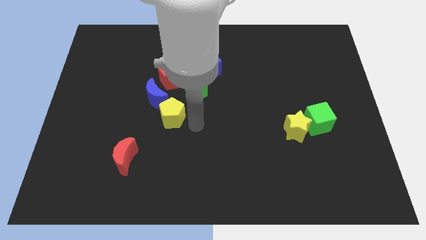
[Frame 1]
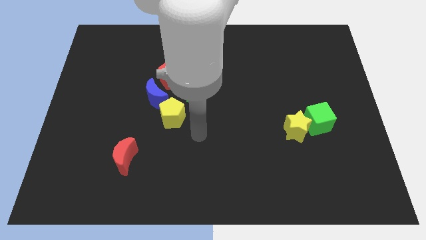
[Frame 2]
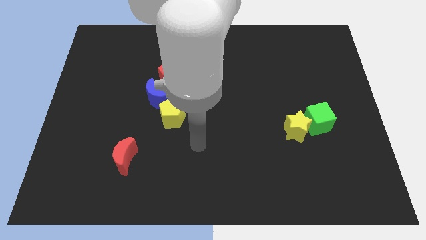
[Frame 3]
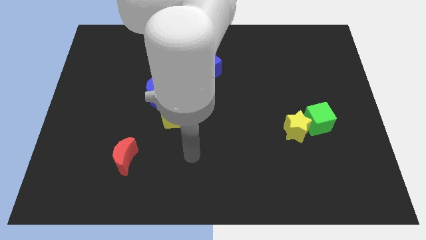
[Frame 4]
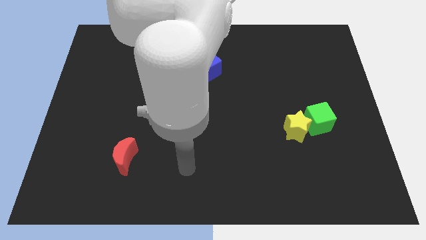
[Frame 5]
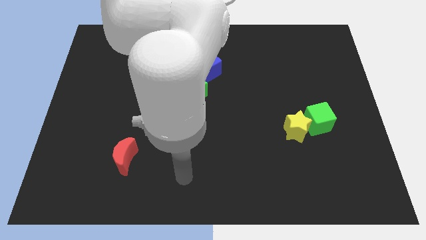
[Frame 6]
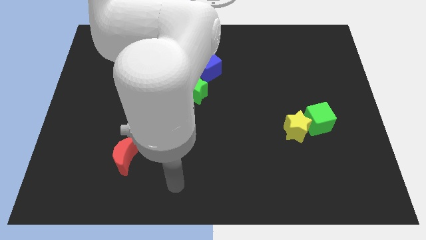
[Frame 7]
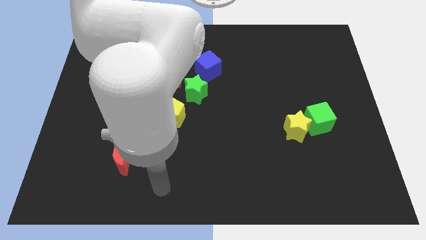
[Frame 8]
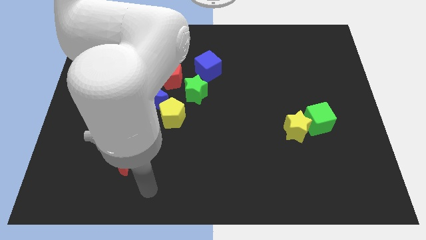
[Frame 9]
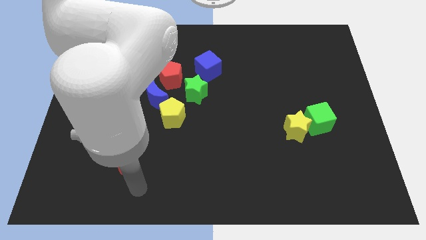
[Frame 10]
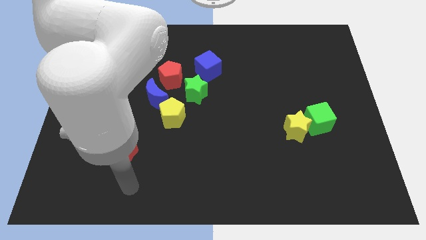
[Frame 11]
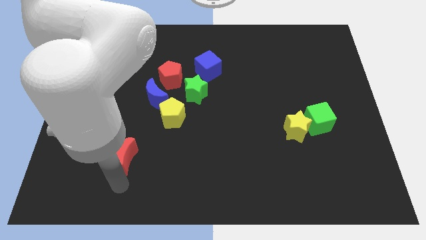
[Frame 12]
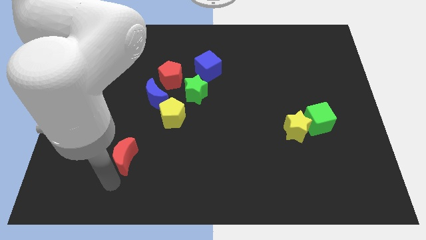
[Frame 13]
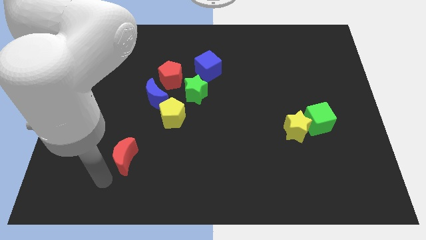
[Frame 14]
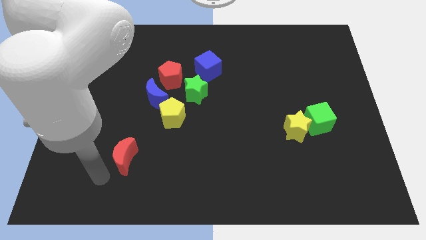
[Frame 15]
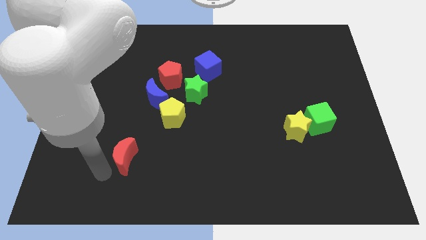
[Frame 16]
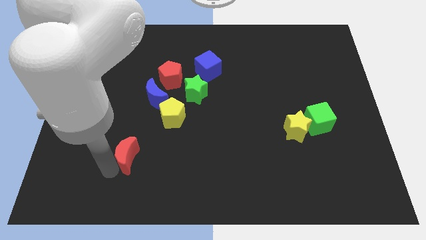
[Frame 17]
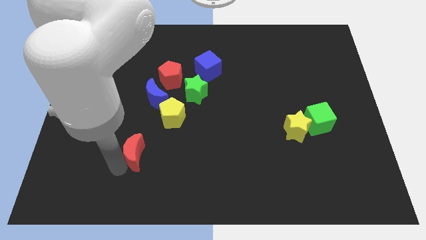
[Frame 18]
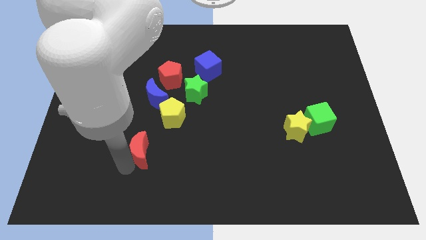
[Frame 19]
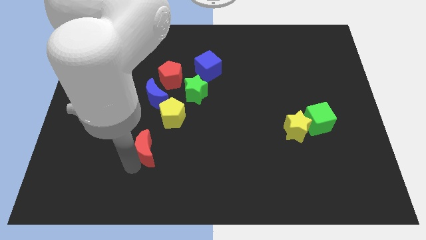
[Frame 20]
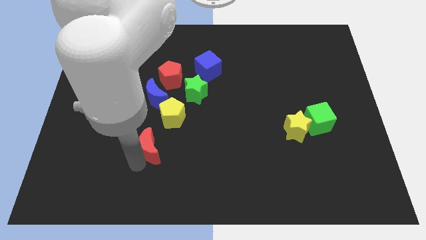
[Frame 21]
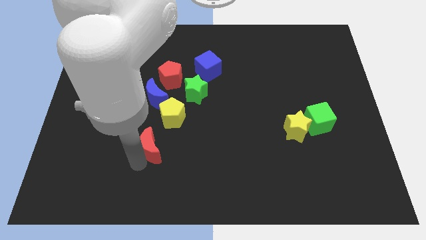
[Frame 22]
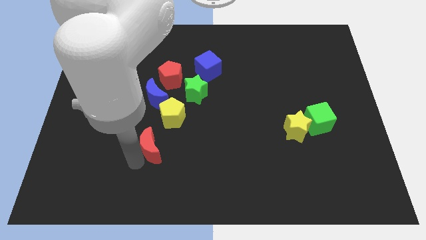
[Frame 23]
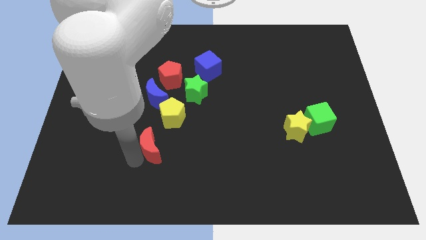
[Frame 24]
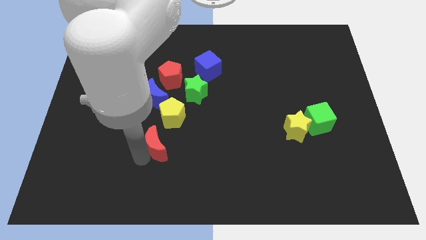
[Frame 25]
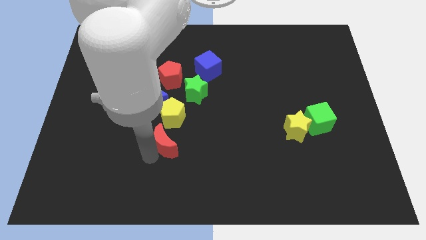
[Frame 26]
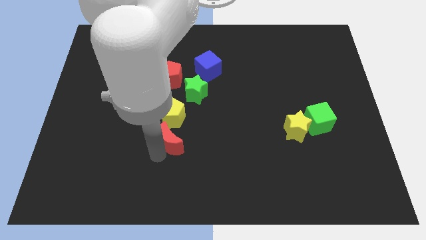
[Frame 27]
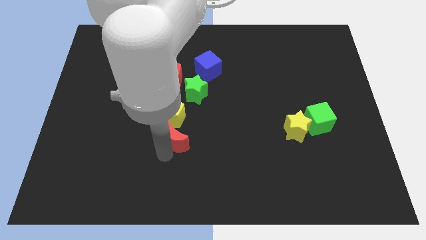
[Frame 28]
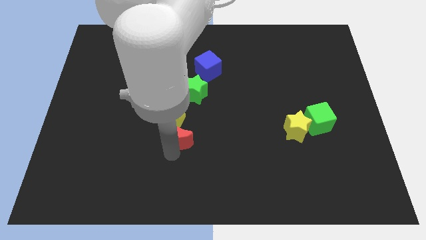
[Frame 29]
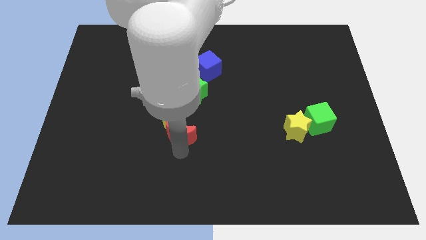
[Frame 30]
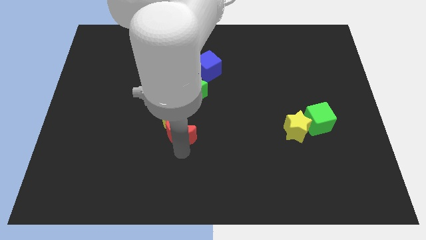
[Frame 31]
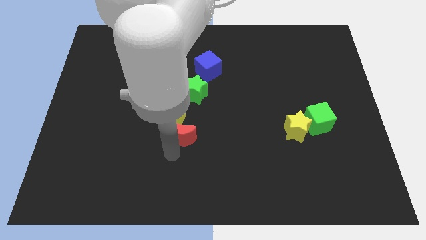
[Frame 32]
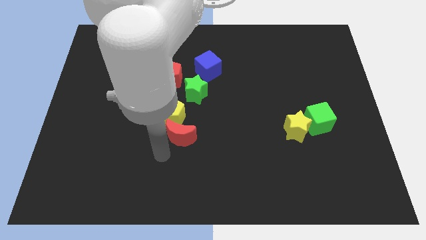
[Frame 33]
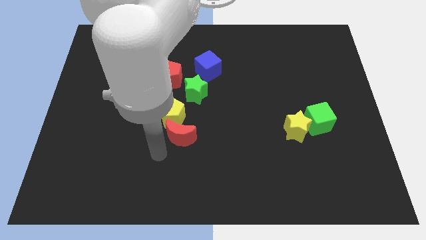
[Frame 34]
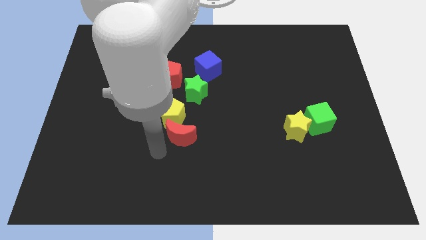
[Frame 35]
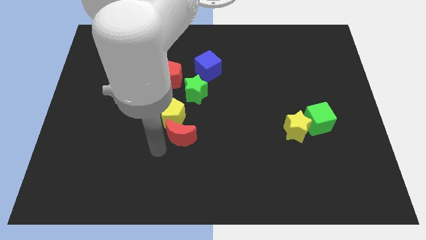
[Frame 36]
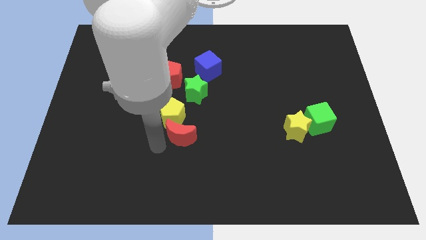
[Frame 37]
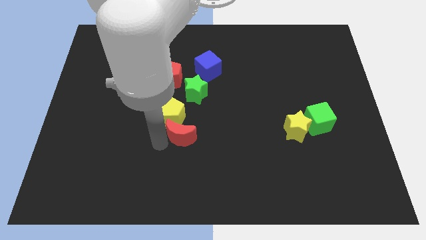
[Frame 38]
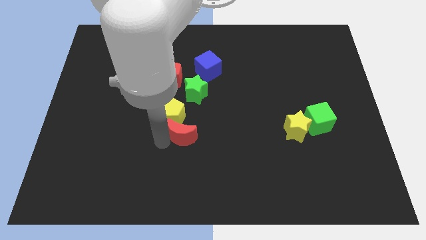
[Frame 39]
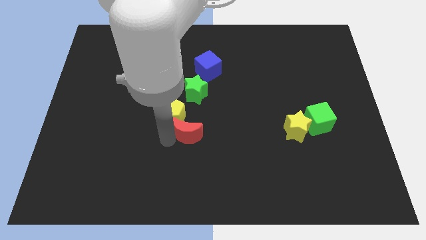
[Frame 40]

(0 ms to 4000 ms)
drag the red crescent into the bottom side of the yellow pentagon

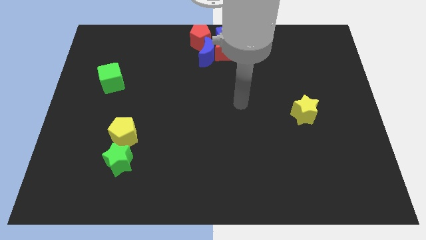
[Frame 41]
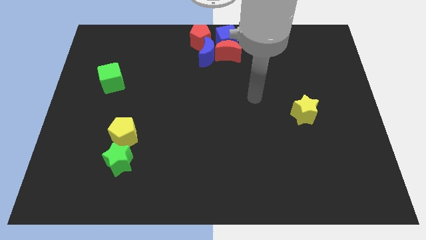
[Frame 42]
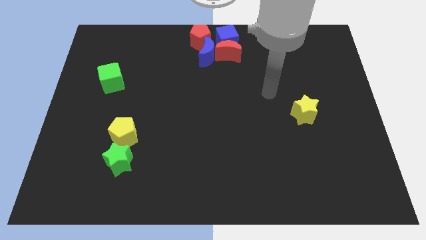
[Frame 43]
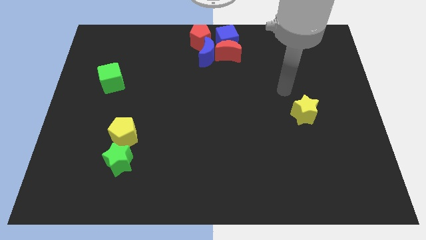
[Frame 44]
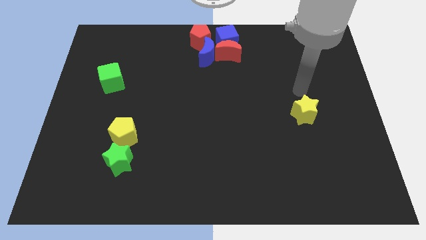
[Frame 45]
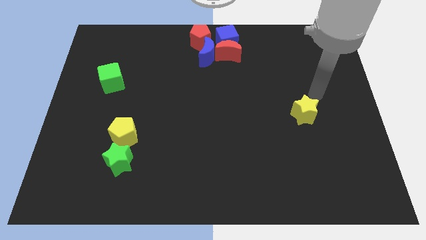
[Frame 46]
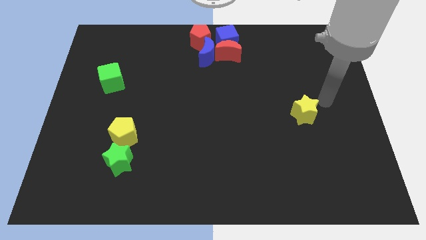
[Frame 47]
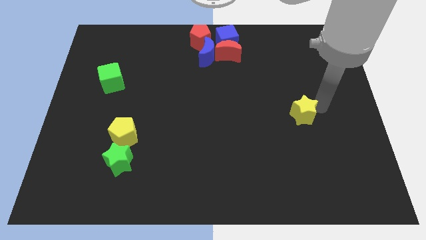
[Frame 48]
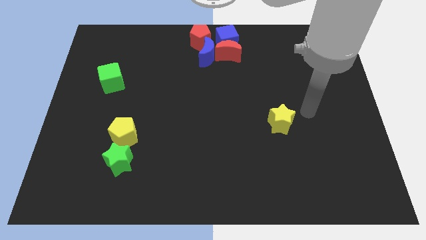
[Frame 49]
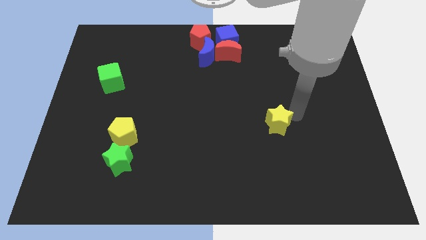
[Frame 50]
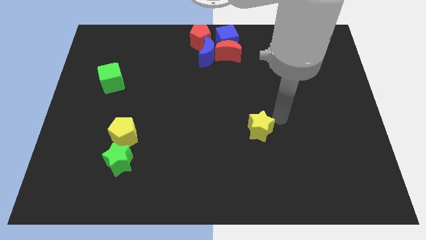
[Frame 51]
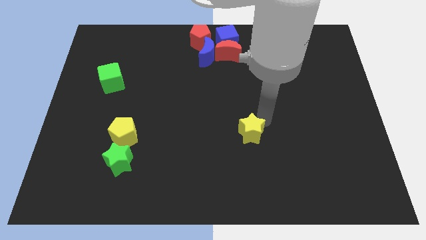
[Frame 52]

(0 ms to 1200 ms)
move the arm right to the yellow star

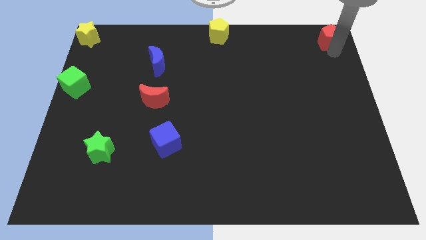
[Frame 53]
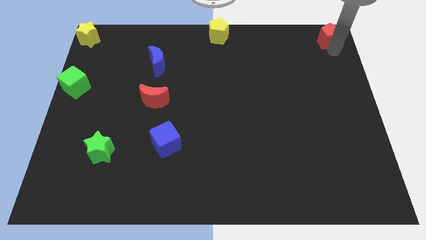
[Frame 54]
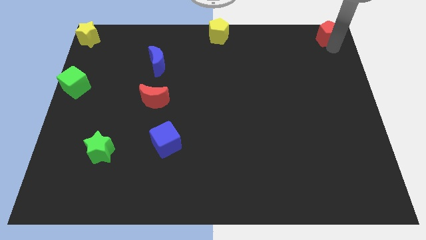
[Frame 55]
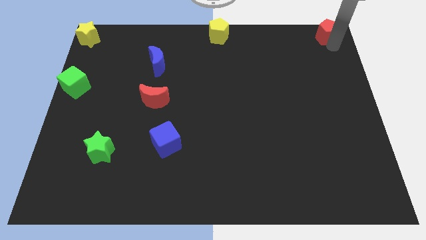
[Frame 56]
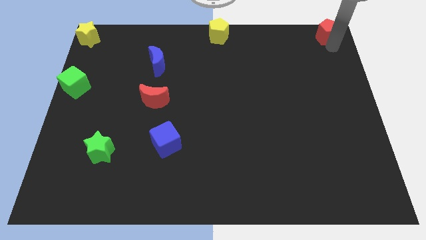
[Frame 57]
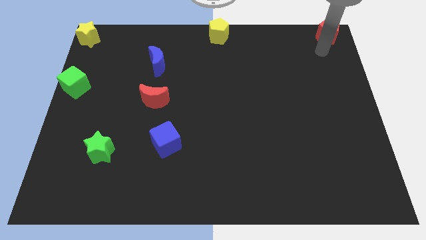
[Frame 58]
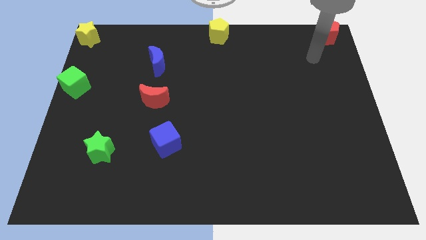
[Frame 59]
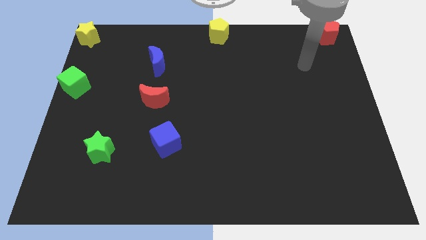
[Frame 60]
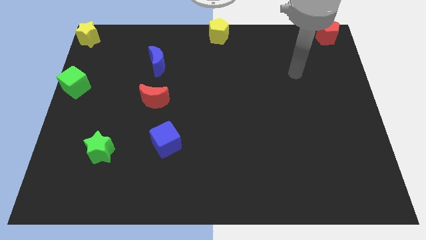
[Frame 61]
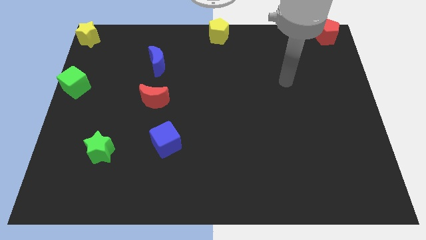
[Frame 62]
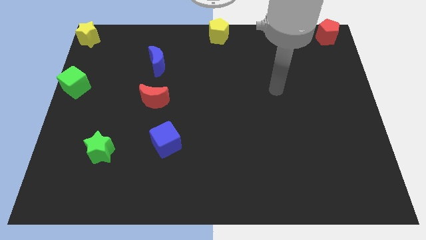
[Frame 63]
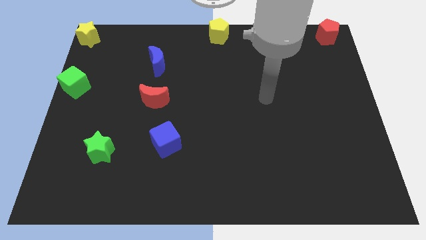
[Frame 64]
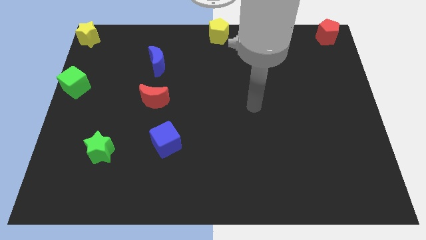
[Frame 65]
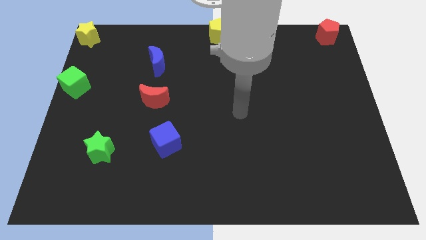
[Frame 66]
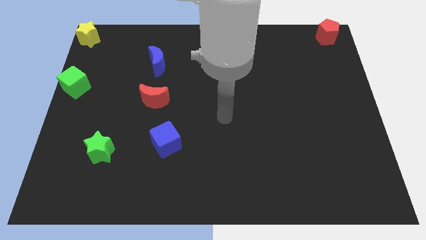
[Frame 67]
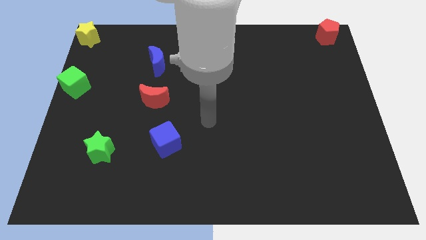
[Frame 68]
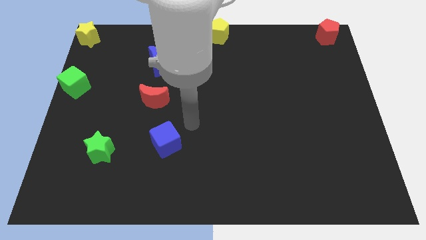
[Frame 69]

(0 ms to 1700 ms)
go away from the red pentagon

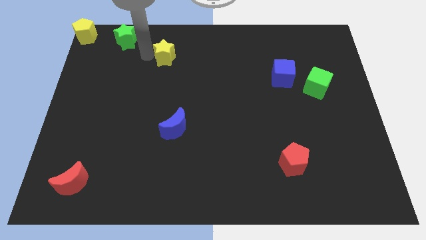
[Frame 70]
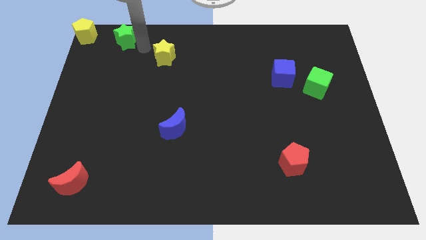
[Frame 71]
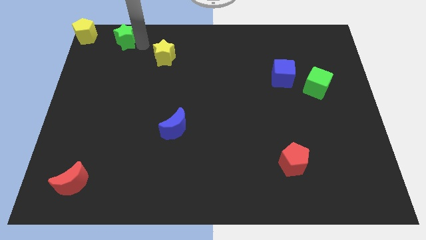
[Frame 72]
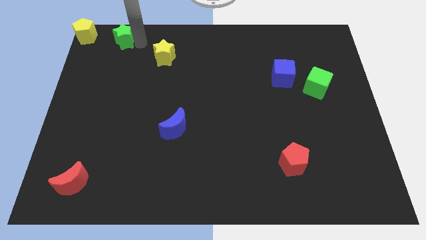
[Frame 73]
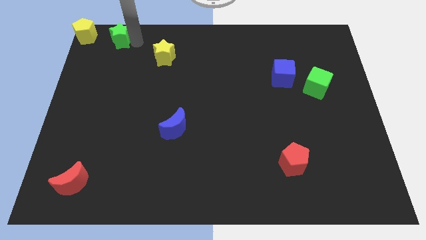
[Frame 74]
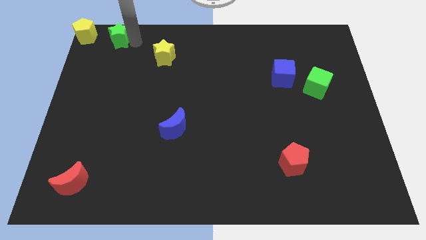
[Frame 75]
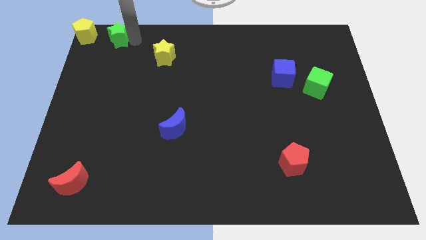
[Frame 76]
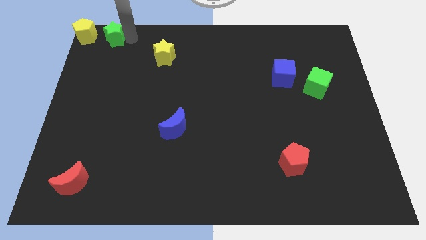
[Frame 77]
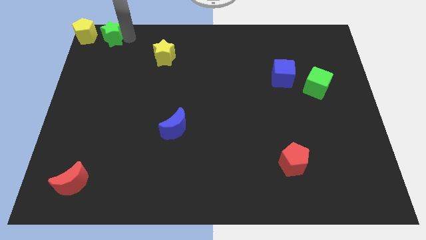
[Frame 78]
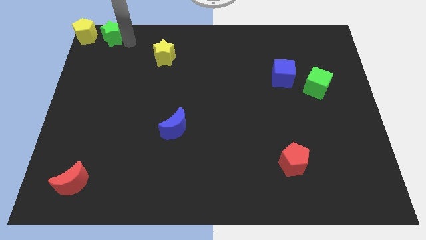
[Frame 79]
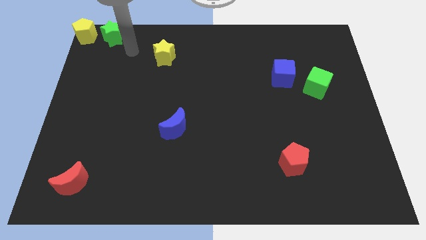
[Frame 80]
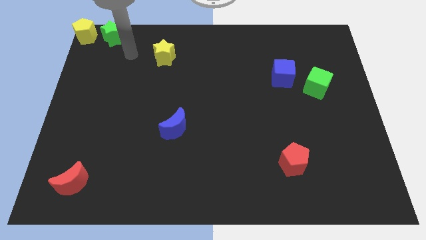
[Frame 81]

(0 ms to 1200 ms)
push the green star towards the yellow pentagon

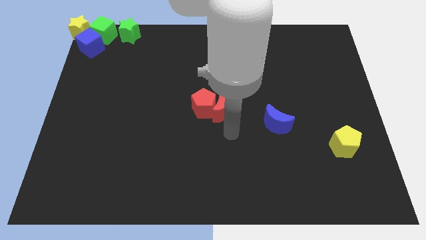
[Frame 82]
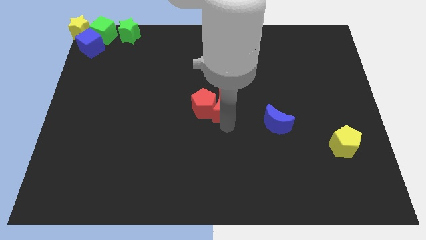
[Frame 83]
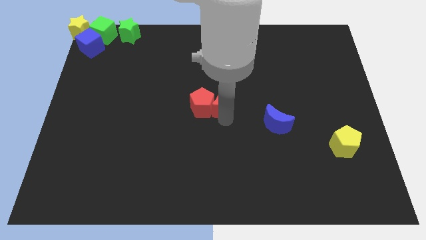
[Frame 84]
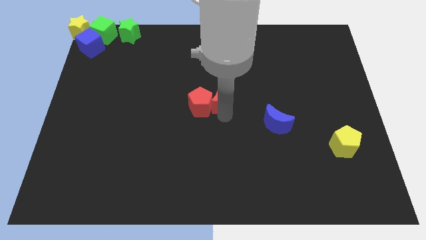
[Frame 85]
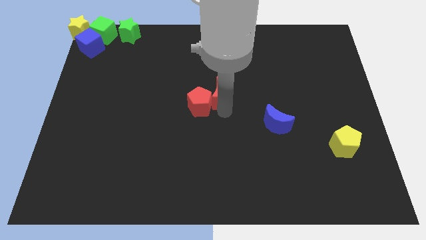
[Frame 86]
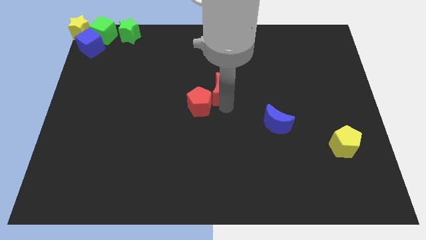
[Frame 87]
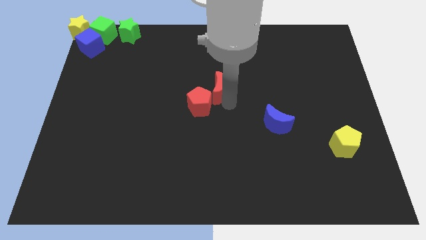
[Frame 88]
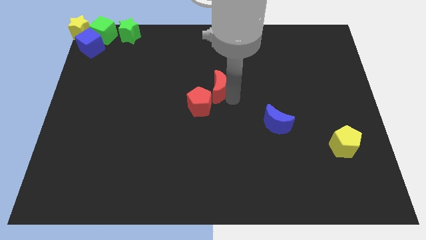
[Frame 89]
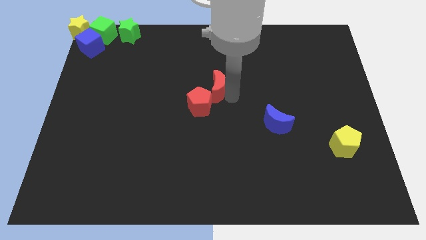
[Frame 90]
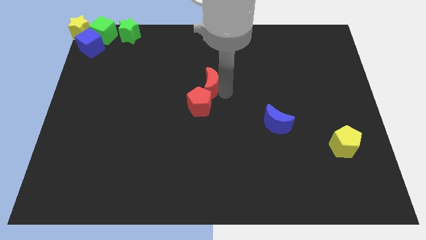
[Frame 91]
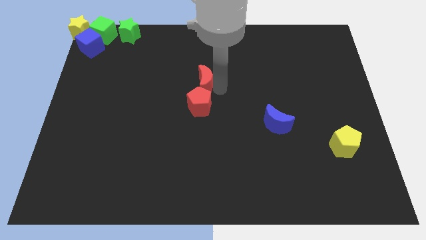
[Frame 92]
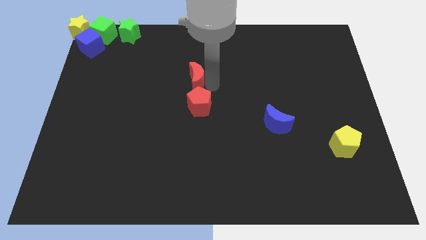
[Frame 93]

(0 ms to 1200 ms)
place the red crescent at the top of the red pentagon
